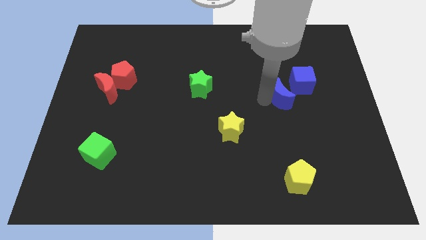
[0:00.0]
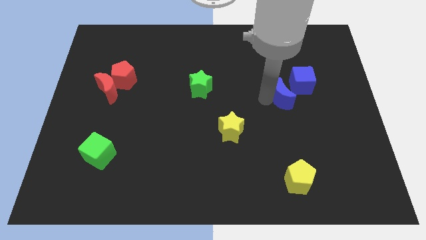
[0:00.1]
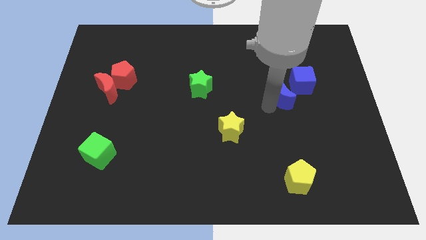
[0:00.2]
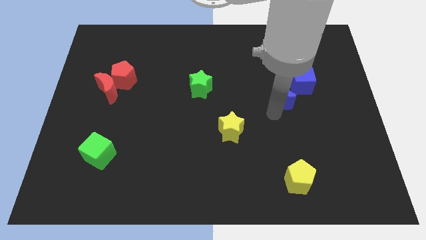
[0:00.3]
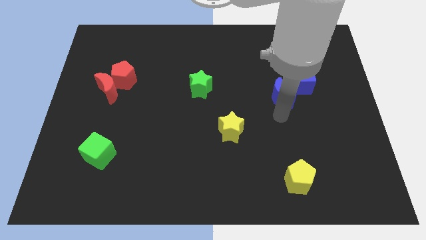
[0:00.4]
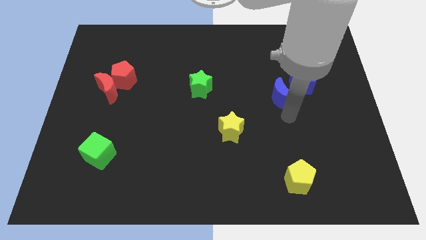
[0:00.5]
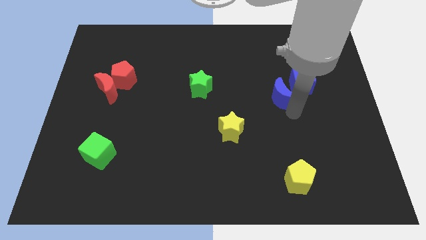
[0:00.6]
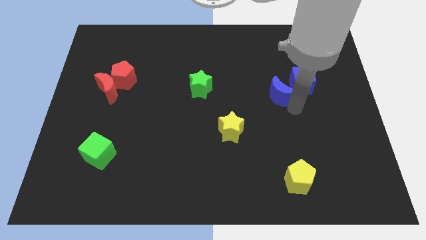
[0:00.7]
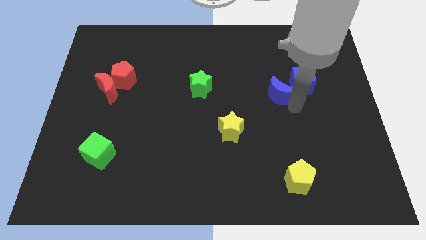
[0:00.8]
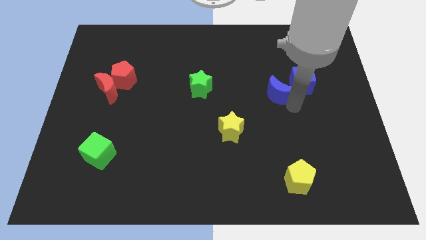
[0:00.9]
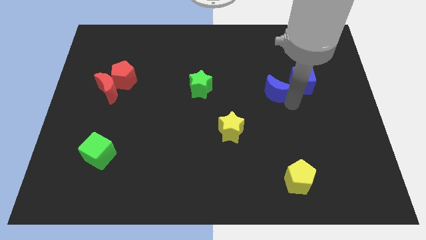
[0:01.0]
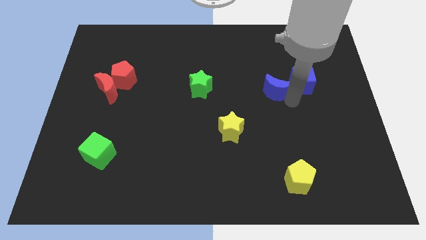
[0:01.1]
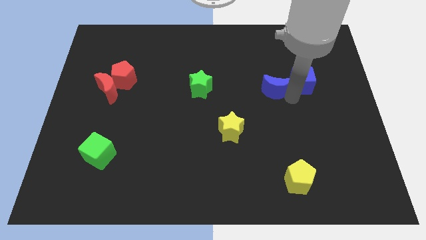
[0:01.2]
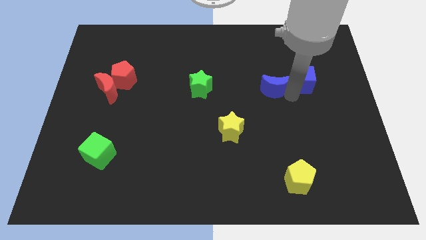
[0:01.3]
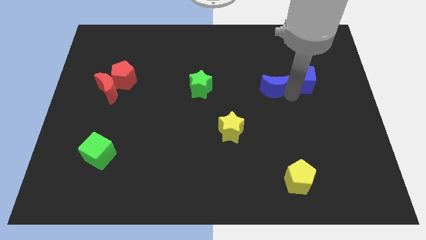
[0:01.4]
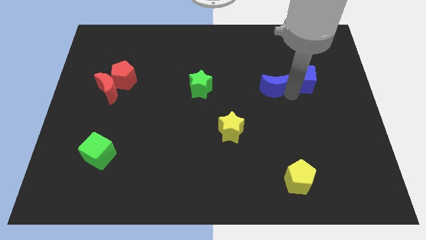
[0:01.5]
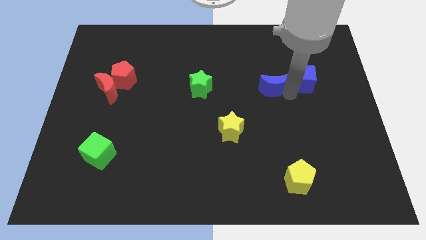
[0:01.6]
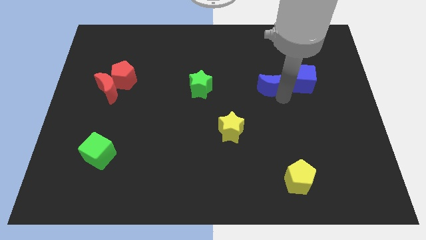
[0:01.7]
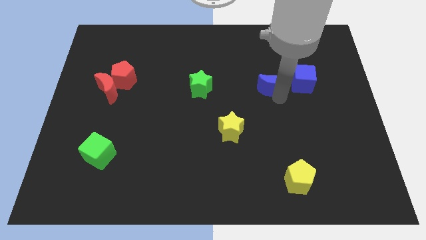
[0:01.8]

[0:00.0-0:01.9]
slide the blue crescent to the left side of the blue cube

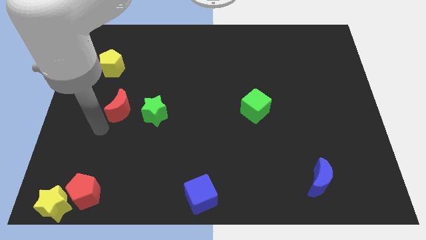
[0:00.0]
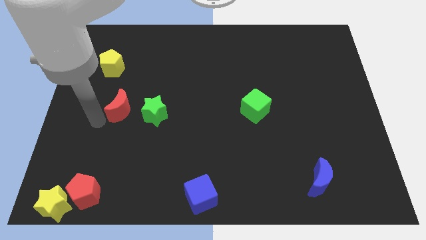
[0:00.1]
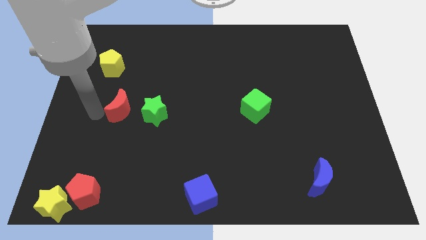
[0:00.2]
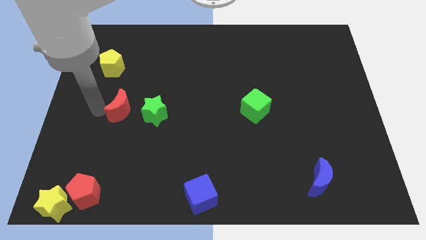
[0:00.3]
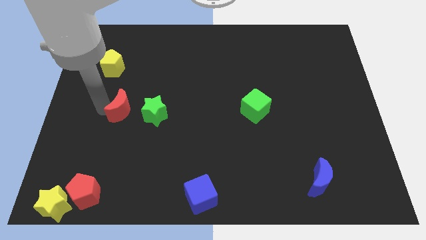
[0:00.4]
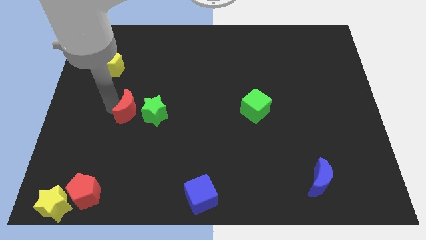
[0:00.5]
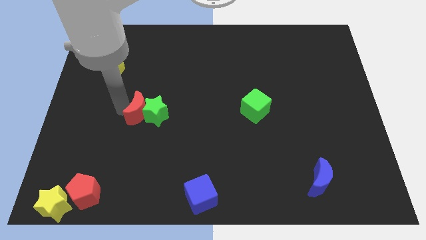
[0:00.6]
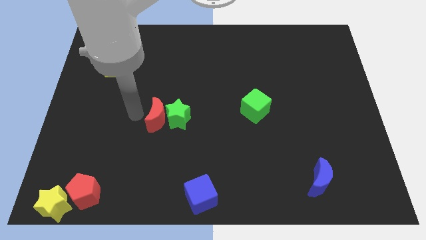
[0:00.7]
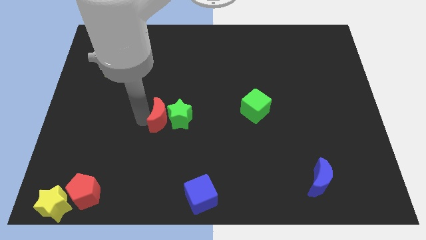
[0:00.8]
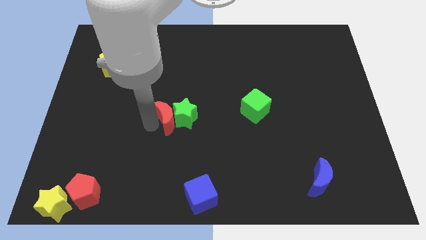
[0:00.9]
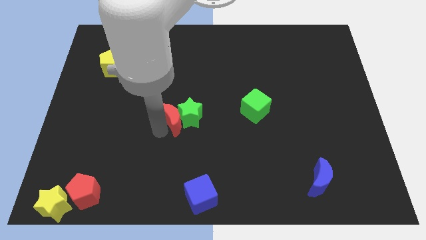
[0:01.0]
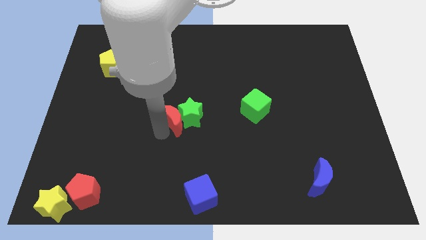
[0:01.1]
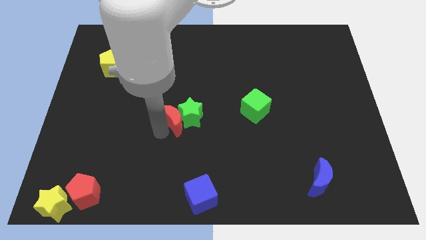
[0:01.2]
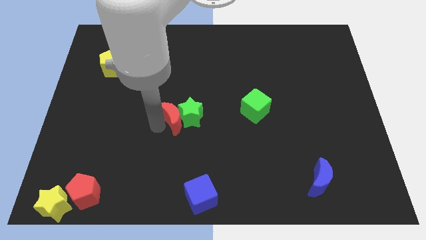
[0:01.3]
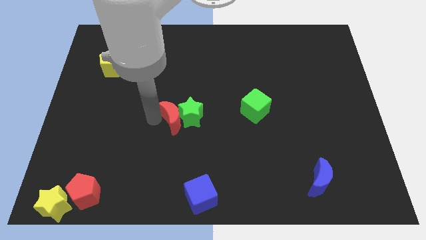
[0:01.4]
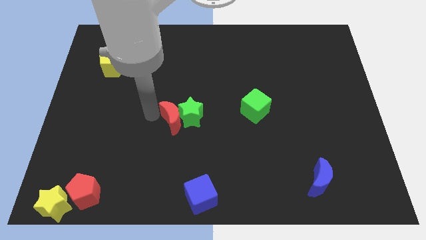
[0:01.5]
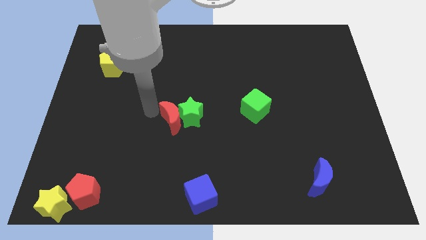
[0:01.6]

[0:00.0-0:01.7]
push the red moon into the green star

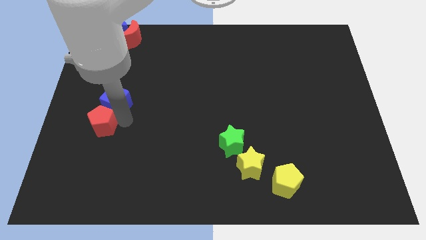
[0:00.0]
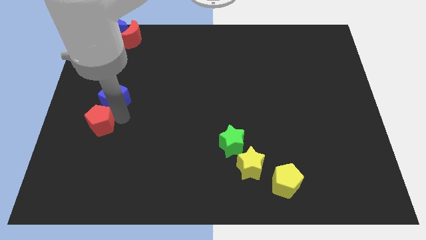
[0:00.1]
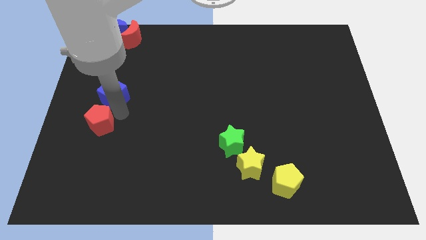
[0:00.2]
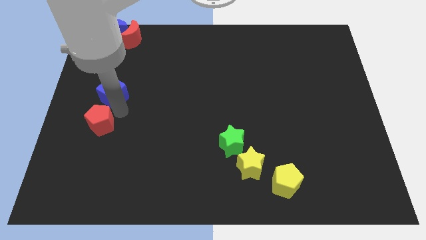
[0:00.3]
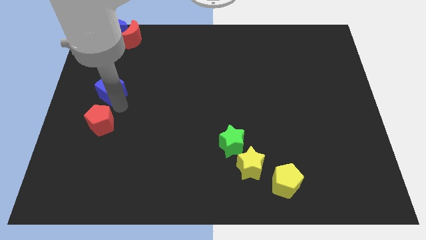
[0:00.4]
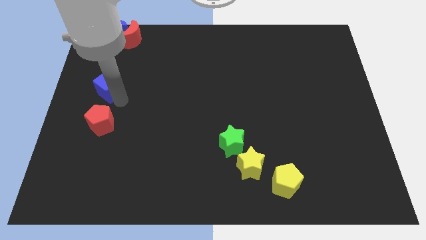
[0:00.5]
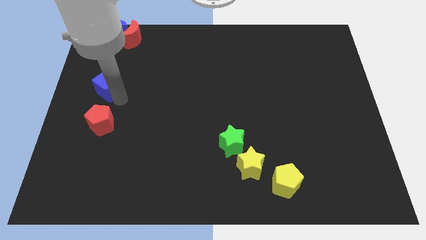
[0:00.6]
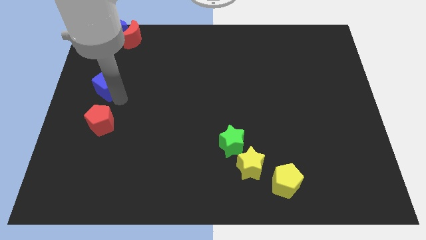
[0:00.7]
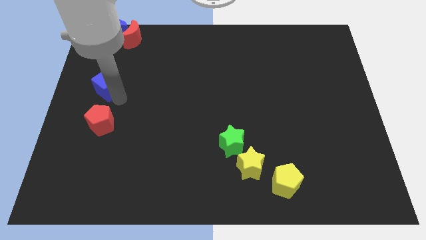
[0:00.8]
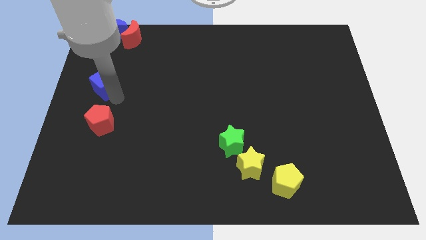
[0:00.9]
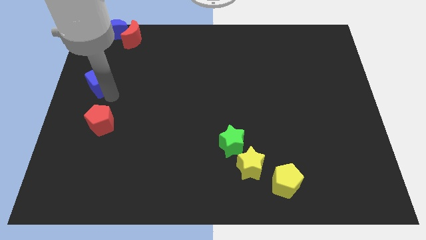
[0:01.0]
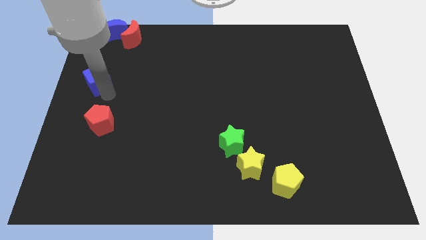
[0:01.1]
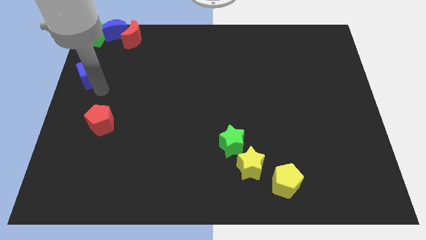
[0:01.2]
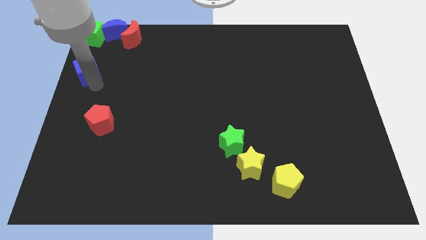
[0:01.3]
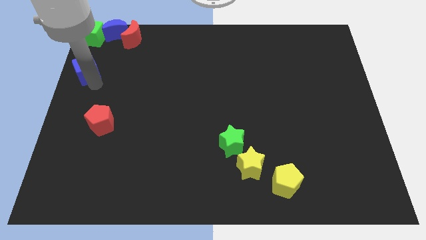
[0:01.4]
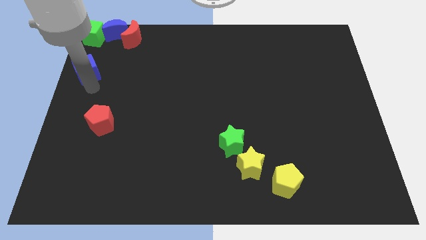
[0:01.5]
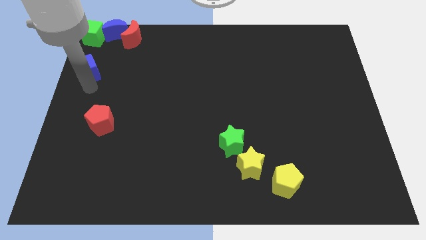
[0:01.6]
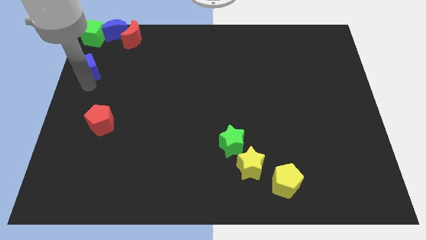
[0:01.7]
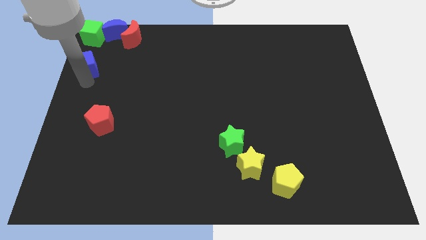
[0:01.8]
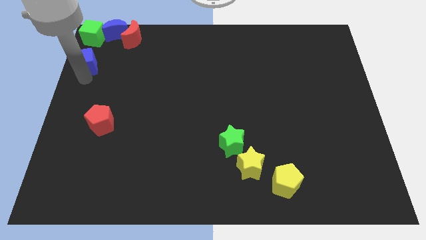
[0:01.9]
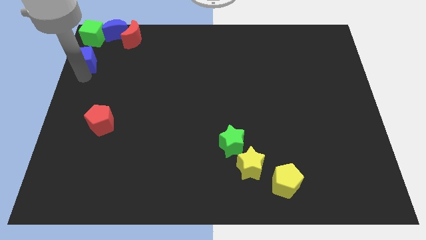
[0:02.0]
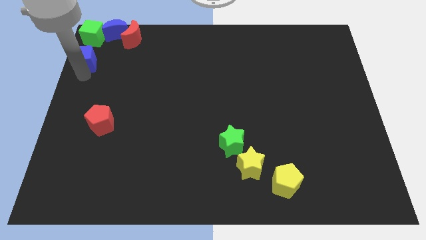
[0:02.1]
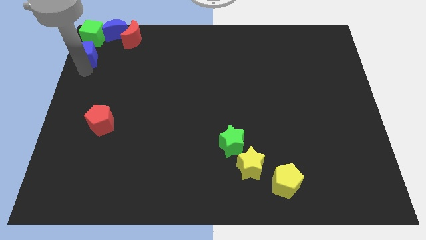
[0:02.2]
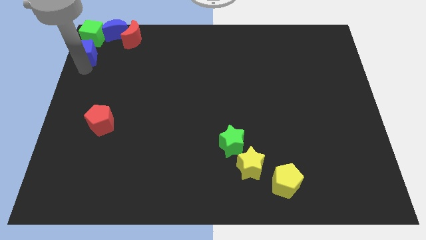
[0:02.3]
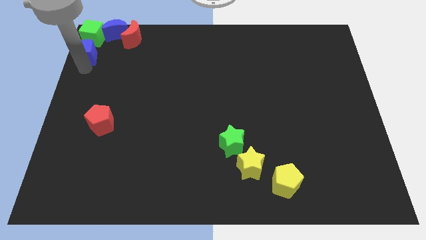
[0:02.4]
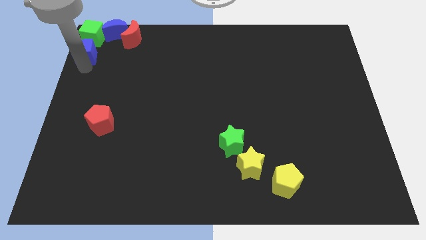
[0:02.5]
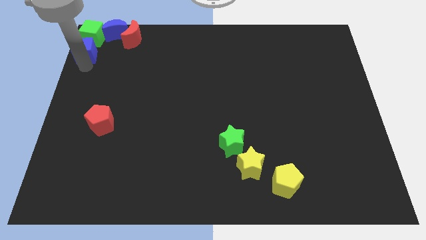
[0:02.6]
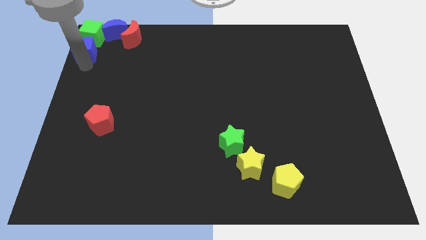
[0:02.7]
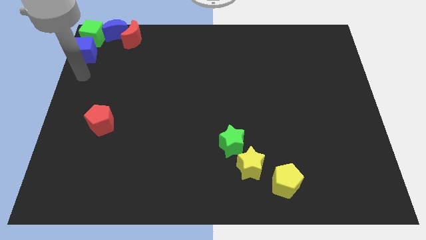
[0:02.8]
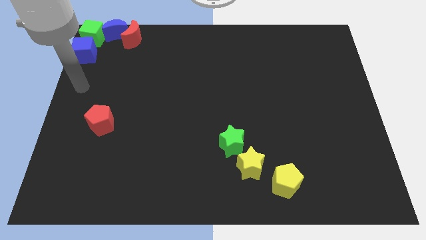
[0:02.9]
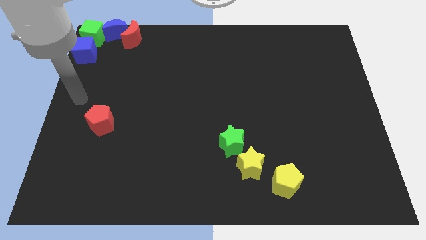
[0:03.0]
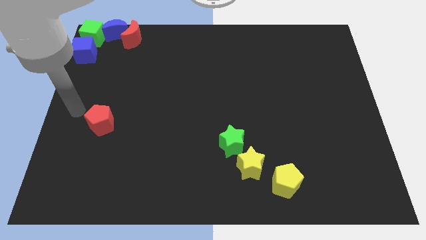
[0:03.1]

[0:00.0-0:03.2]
move the blue cube towards the bottom side of the green cube

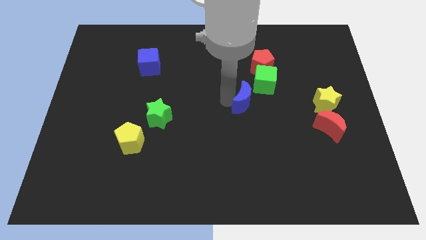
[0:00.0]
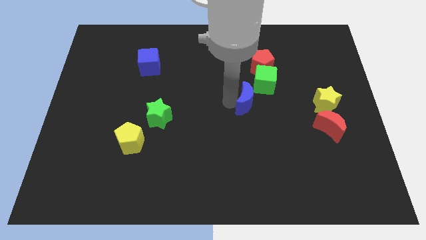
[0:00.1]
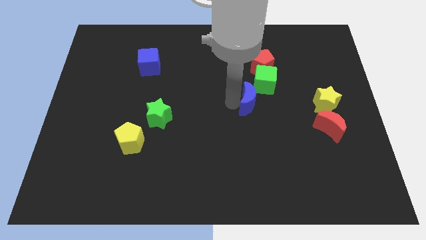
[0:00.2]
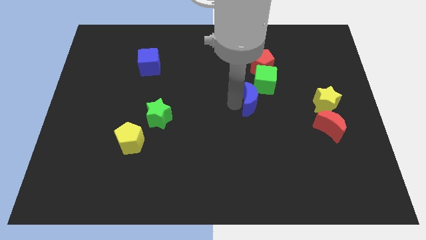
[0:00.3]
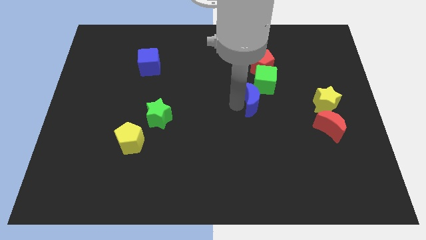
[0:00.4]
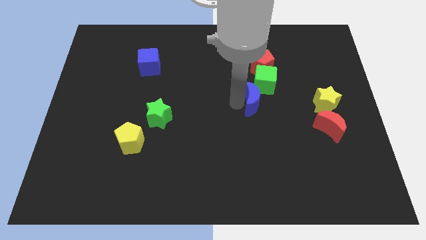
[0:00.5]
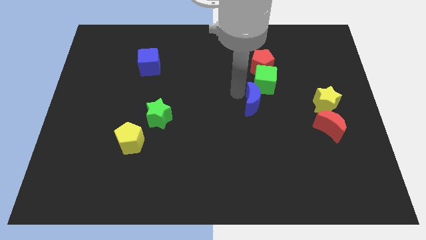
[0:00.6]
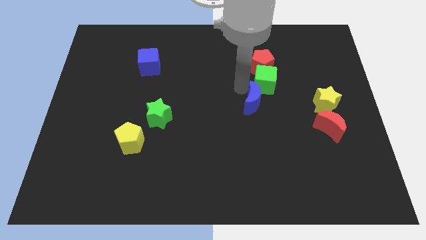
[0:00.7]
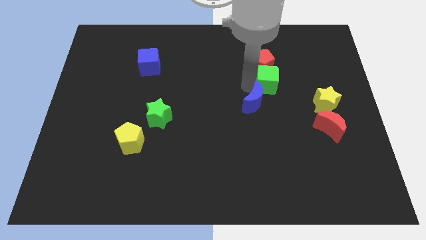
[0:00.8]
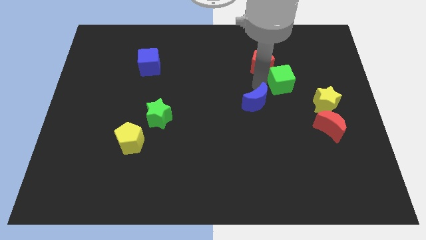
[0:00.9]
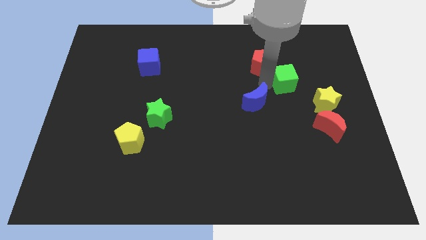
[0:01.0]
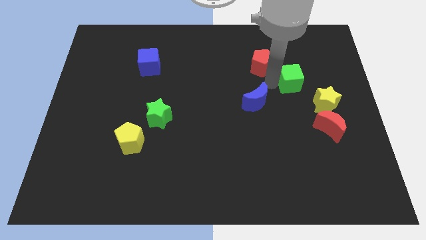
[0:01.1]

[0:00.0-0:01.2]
separate the blue crescent from the green cube

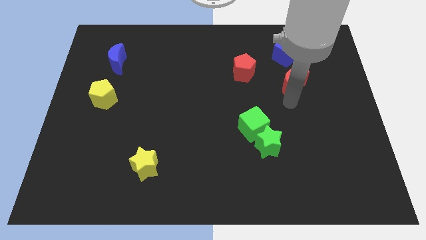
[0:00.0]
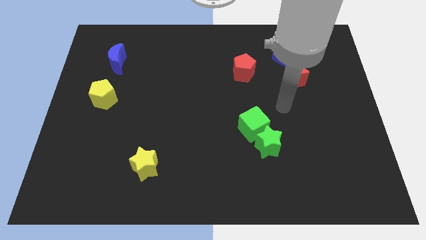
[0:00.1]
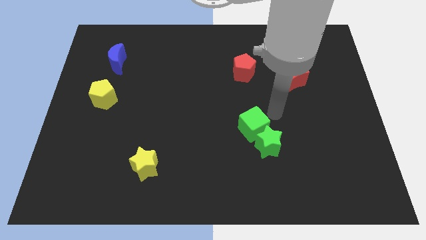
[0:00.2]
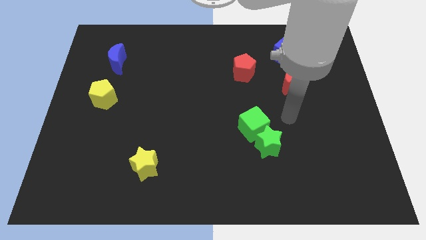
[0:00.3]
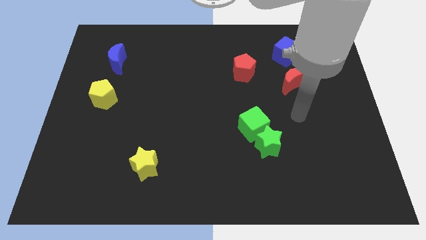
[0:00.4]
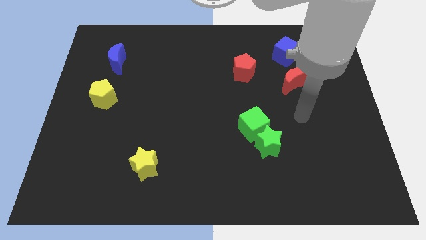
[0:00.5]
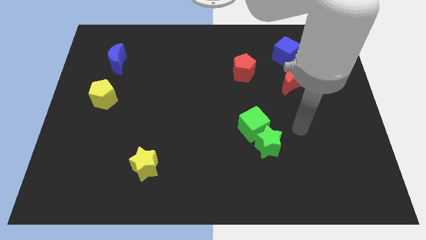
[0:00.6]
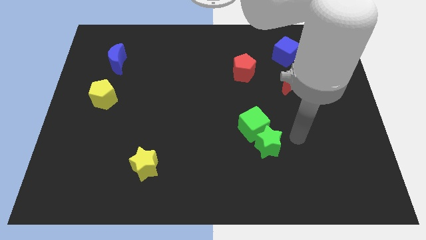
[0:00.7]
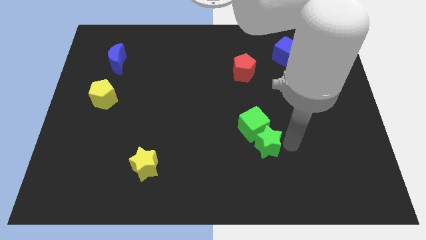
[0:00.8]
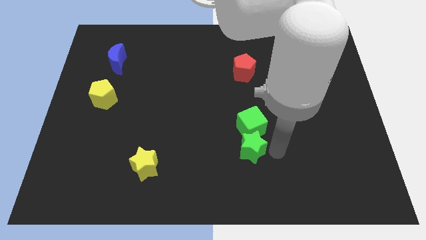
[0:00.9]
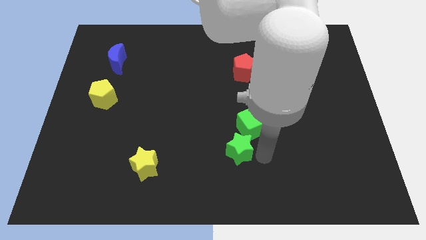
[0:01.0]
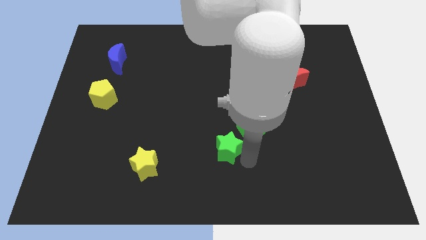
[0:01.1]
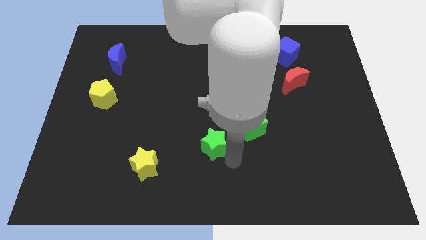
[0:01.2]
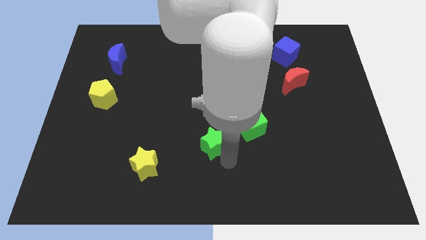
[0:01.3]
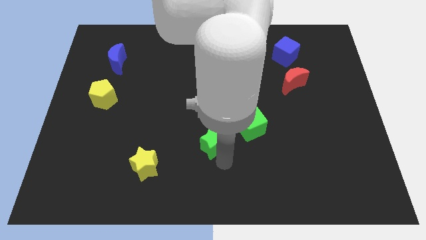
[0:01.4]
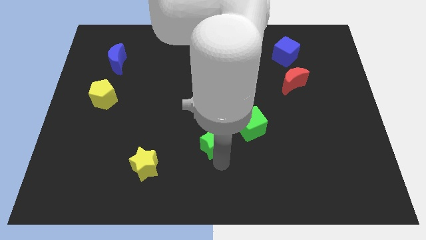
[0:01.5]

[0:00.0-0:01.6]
move green star diagonally in between the green cube and yellow star
